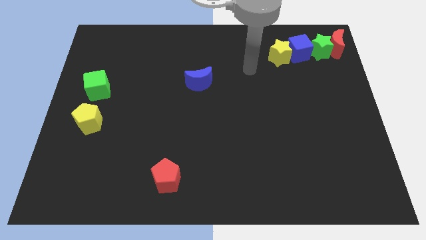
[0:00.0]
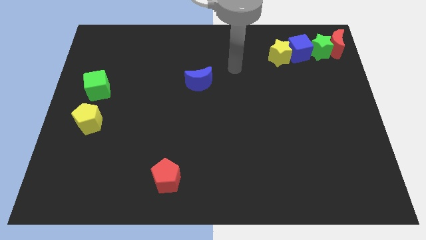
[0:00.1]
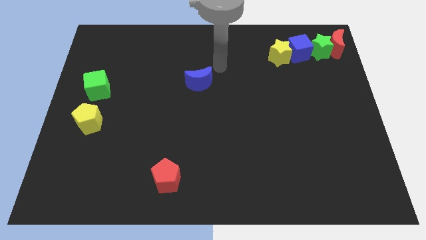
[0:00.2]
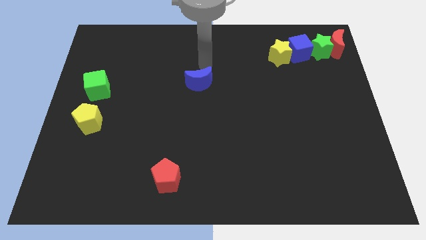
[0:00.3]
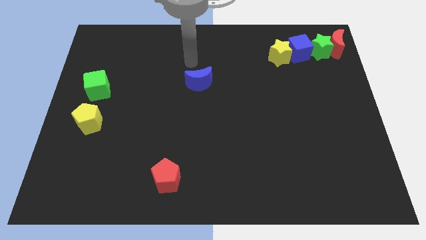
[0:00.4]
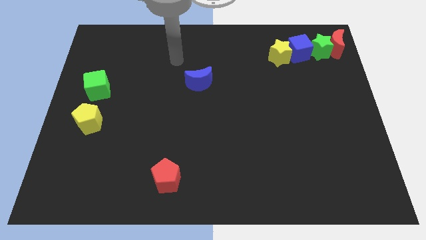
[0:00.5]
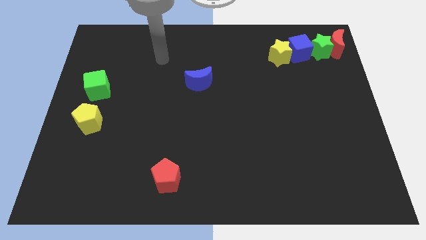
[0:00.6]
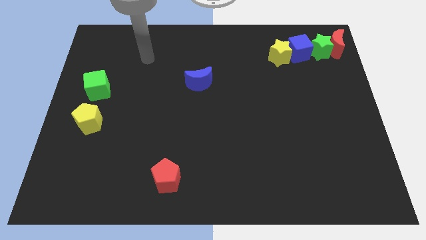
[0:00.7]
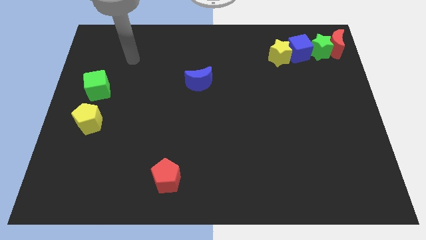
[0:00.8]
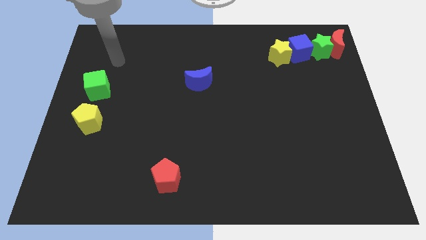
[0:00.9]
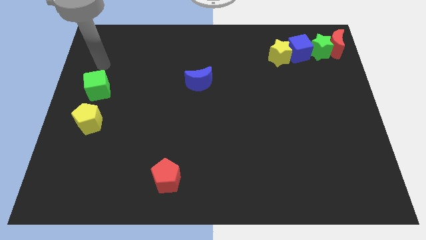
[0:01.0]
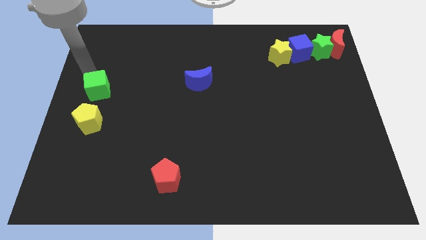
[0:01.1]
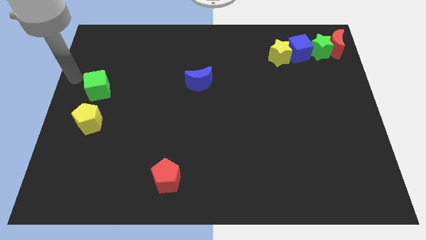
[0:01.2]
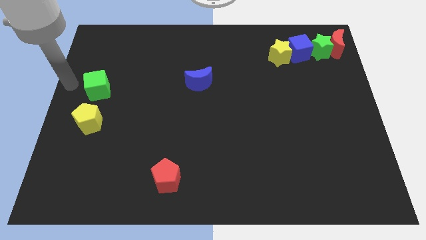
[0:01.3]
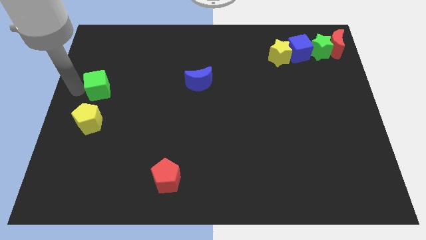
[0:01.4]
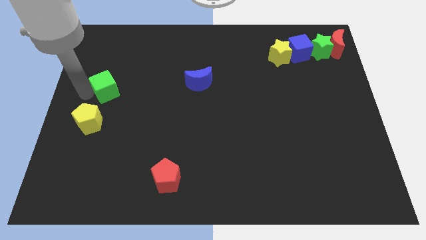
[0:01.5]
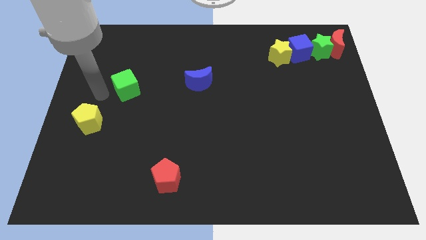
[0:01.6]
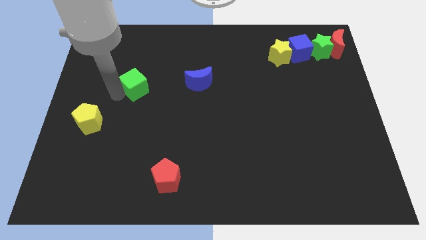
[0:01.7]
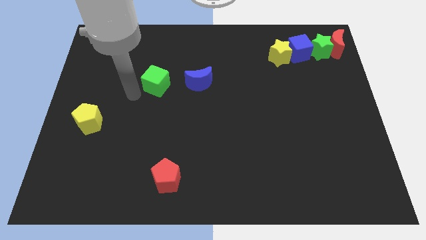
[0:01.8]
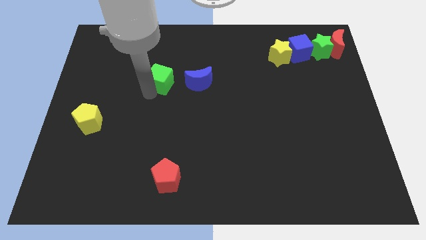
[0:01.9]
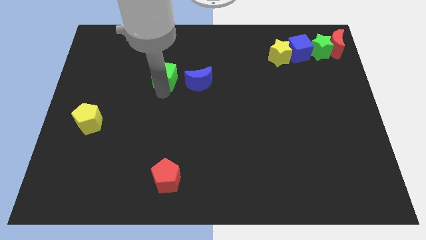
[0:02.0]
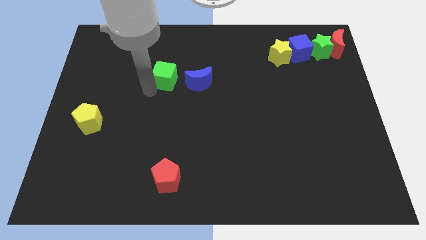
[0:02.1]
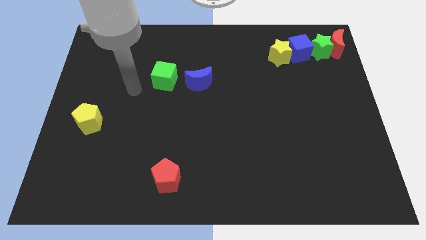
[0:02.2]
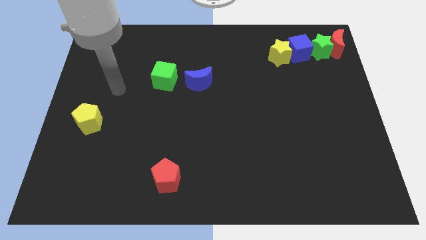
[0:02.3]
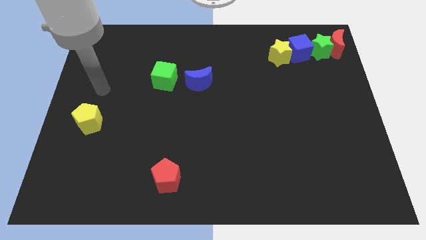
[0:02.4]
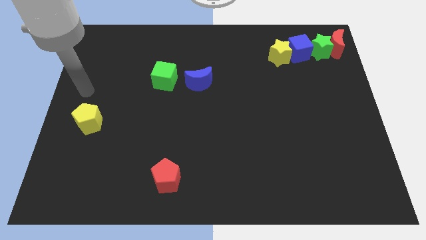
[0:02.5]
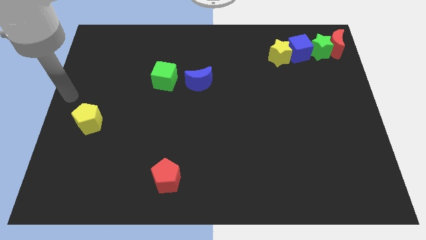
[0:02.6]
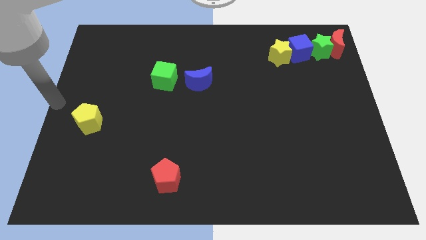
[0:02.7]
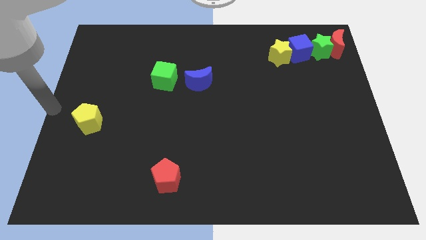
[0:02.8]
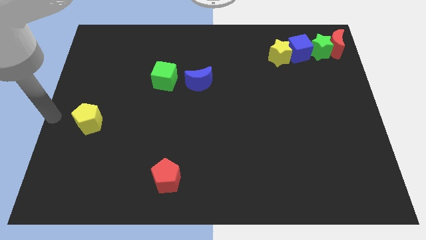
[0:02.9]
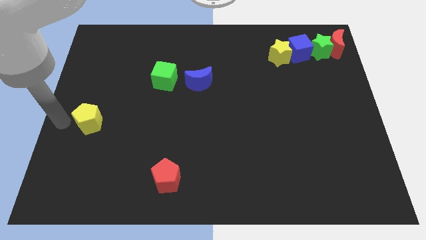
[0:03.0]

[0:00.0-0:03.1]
push the green cube to the left of the blue crescent

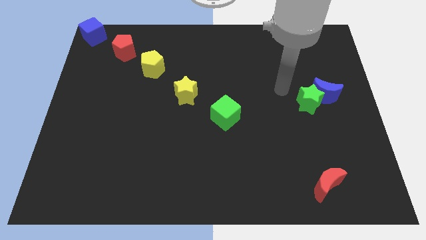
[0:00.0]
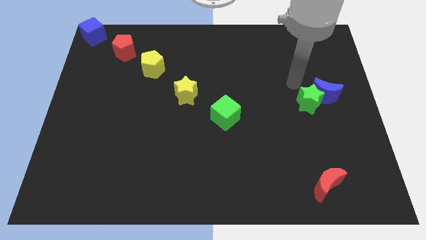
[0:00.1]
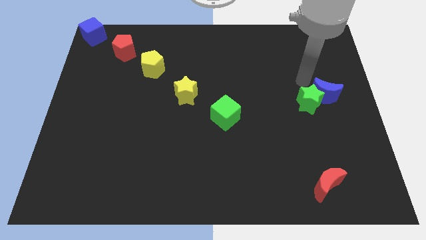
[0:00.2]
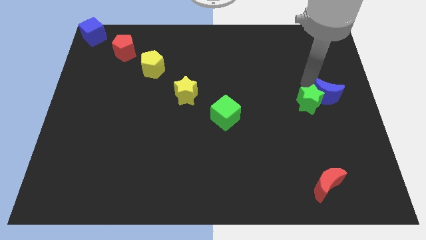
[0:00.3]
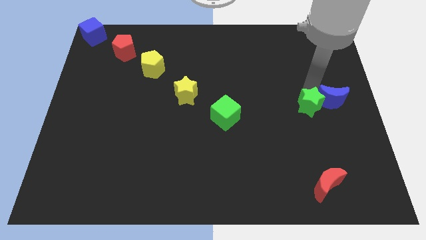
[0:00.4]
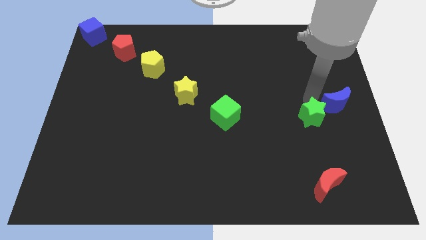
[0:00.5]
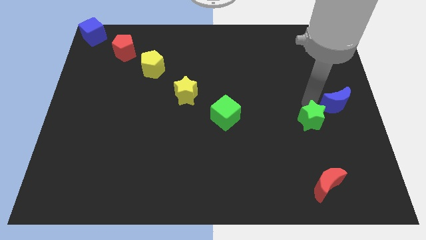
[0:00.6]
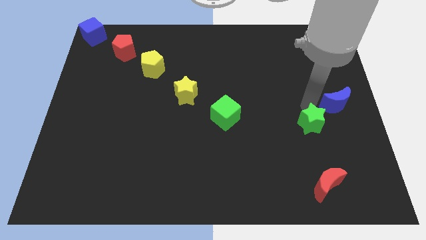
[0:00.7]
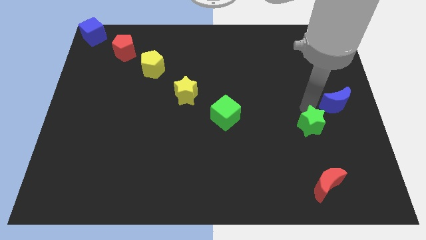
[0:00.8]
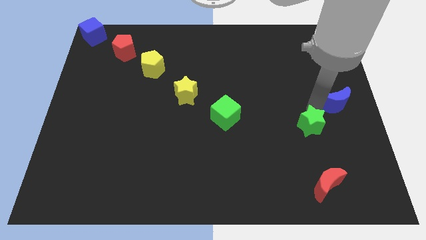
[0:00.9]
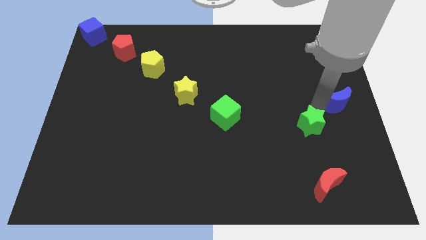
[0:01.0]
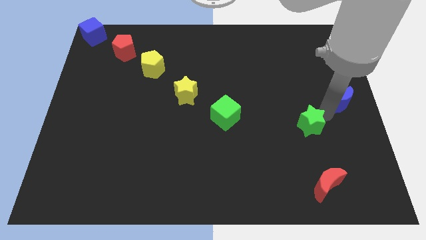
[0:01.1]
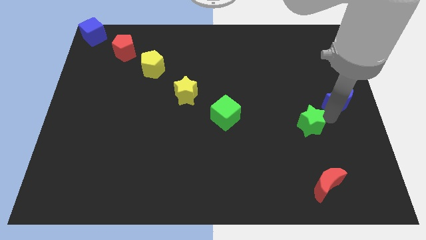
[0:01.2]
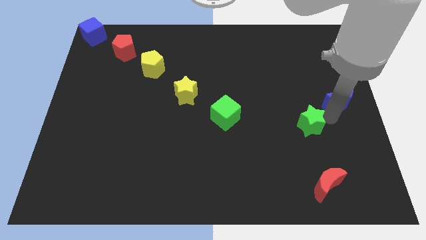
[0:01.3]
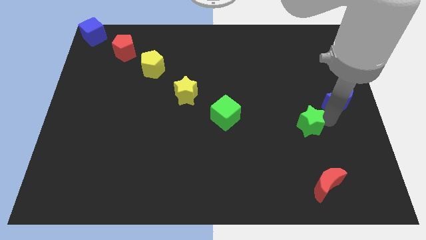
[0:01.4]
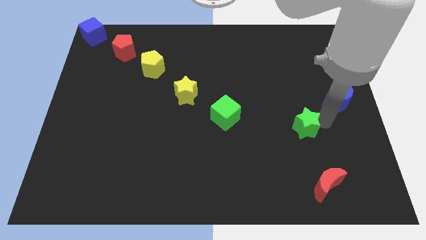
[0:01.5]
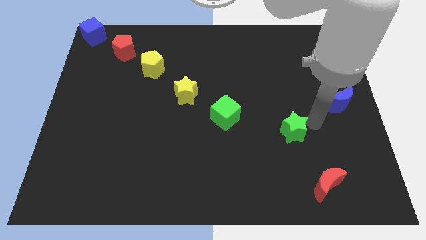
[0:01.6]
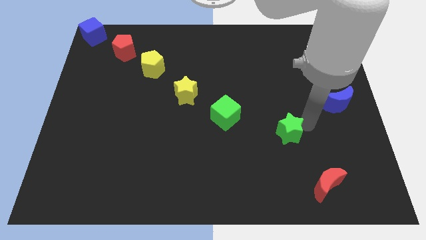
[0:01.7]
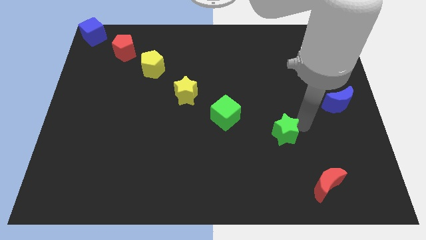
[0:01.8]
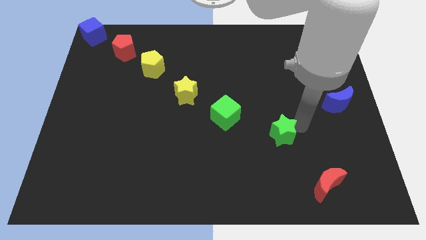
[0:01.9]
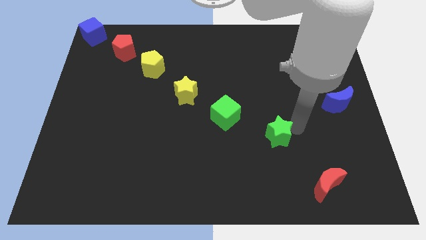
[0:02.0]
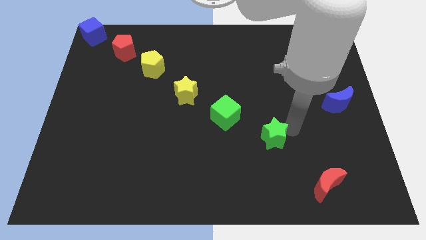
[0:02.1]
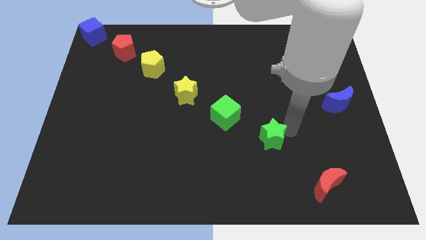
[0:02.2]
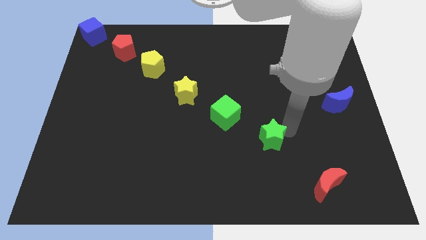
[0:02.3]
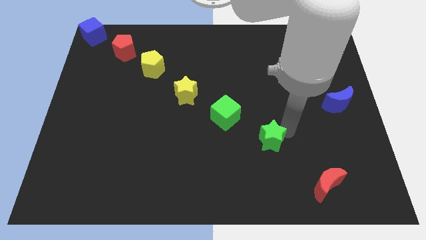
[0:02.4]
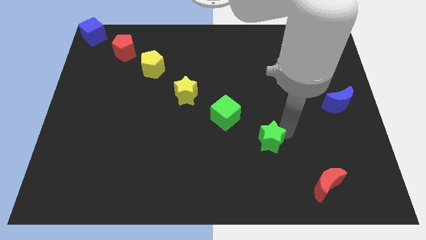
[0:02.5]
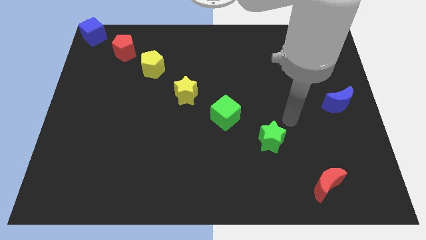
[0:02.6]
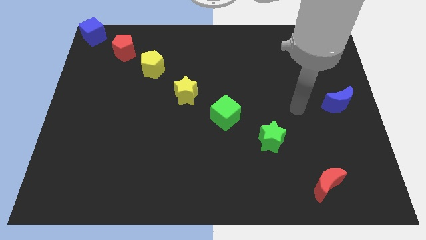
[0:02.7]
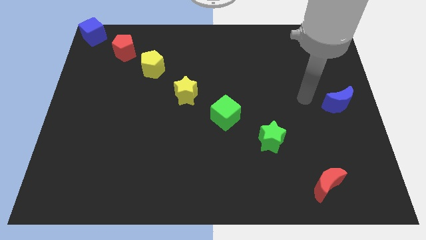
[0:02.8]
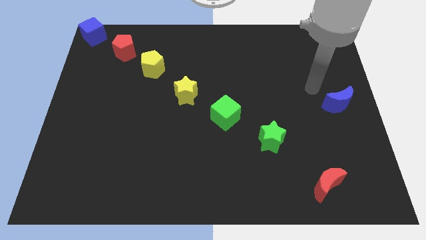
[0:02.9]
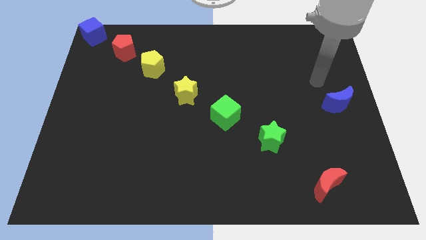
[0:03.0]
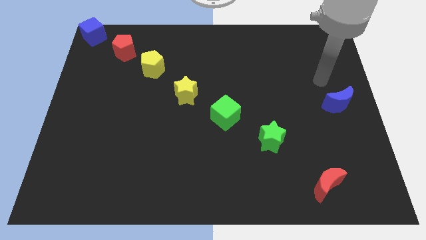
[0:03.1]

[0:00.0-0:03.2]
place the green star to the bottom right of the green cube

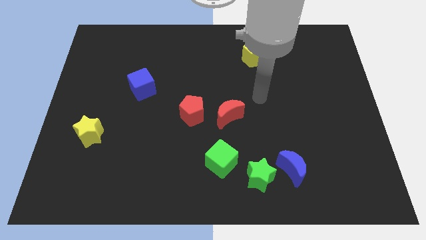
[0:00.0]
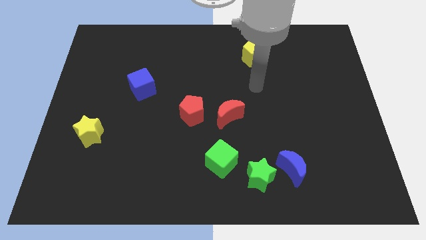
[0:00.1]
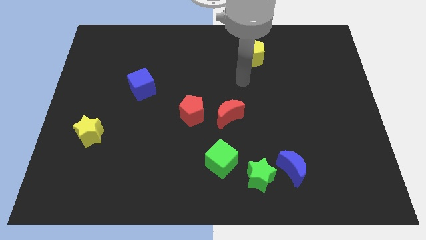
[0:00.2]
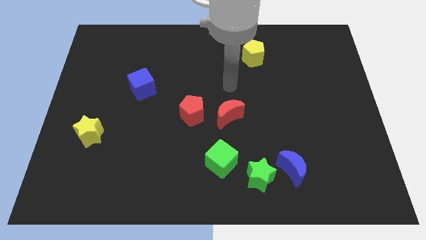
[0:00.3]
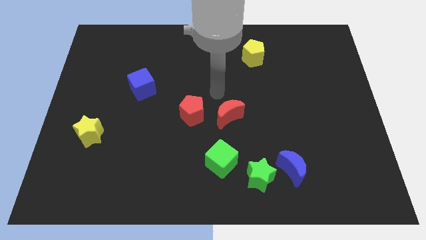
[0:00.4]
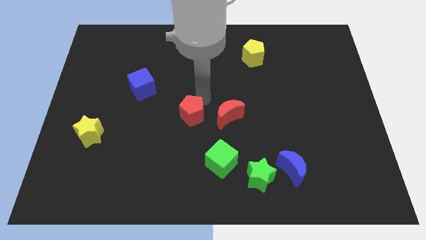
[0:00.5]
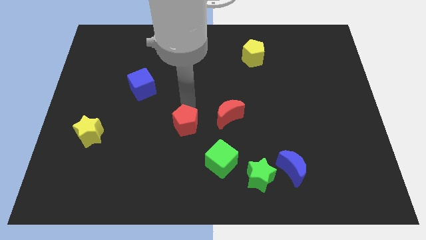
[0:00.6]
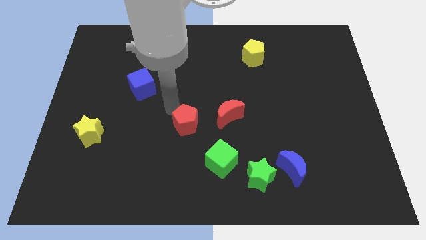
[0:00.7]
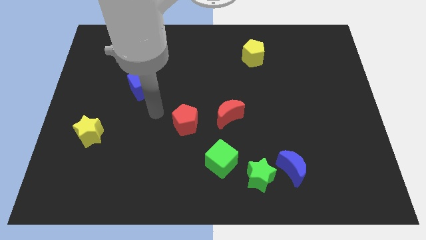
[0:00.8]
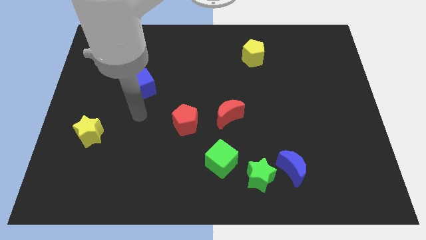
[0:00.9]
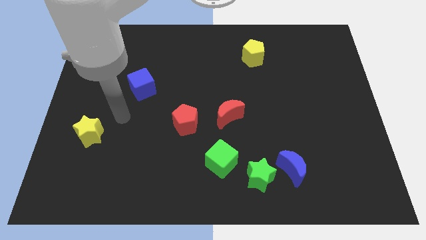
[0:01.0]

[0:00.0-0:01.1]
push red pentagon above green cube

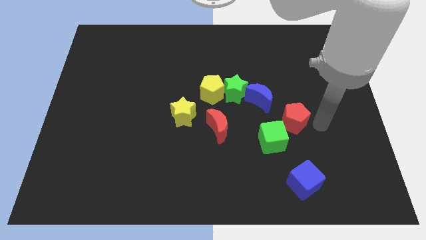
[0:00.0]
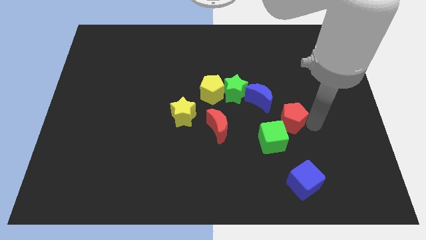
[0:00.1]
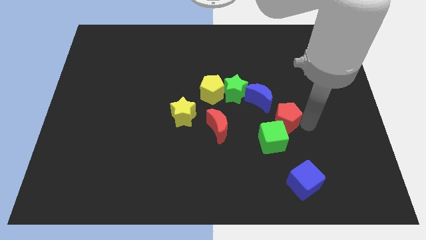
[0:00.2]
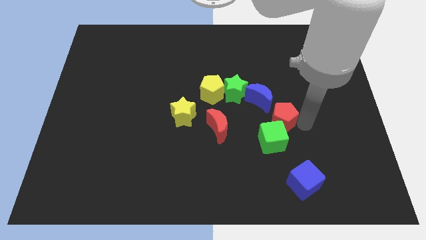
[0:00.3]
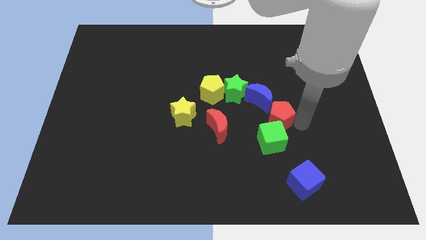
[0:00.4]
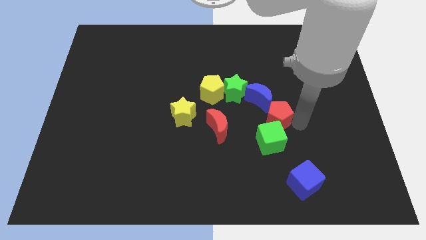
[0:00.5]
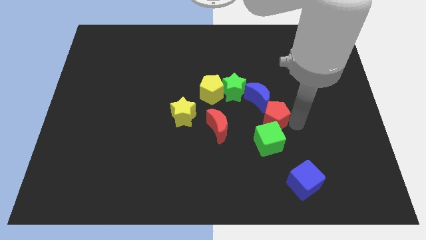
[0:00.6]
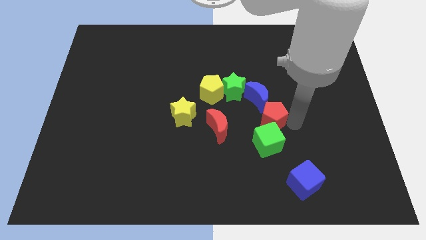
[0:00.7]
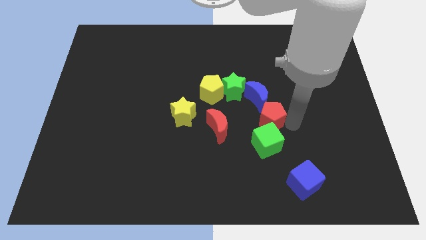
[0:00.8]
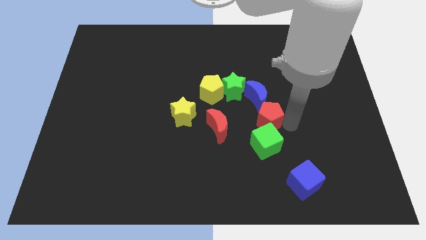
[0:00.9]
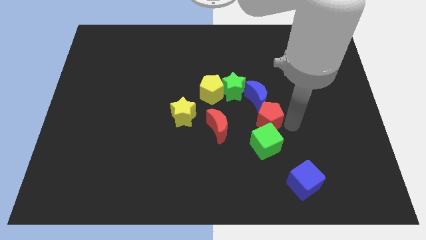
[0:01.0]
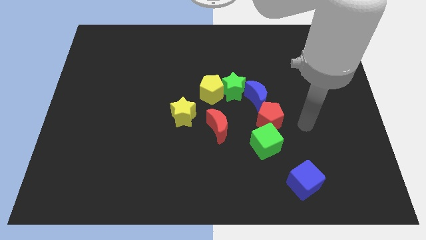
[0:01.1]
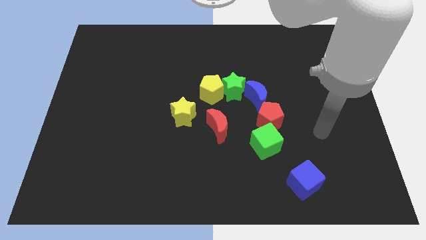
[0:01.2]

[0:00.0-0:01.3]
place the red pentagon in between the green cube and the blue crescent

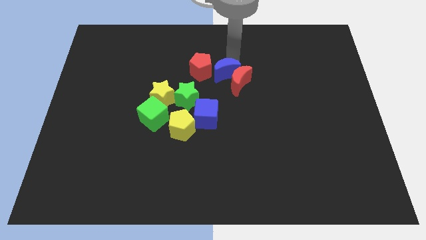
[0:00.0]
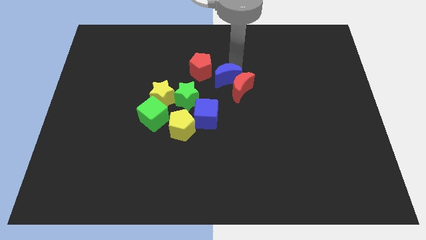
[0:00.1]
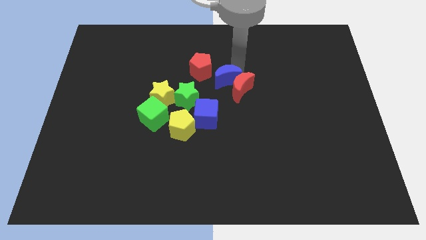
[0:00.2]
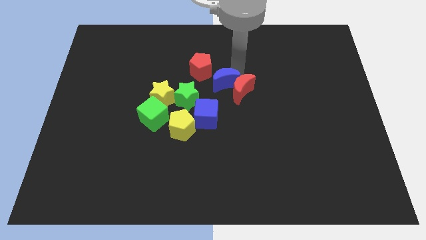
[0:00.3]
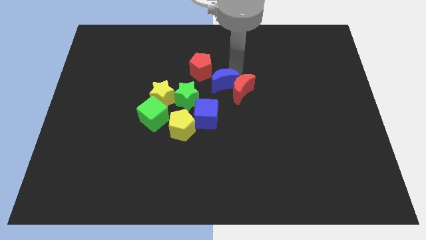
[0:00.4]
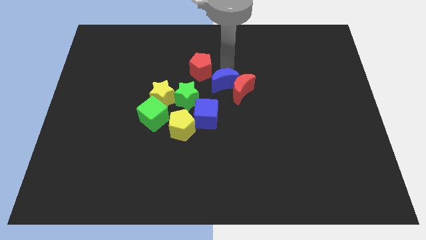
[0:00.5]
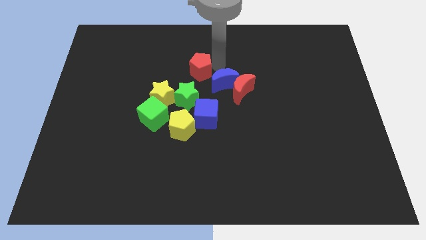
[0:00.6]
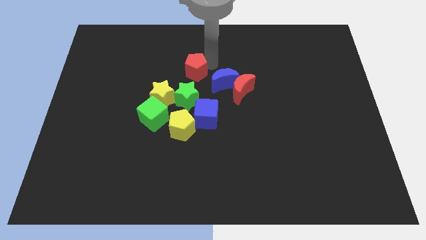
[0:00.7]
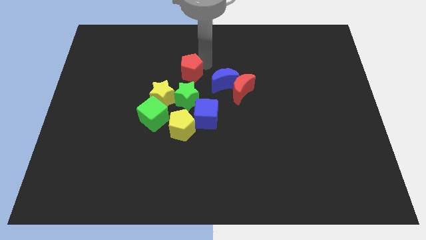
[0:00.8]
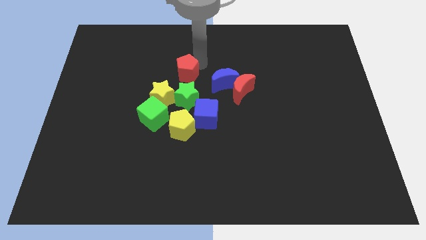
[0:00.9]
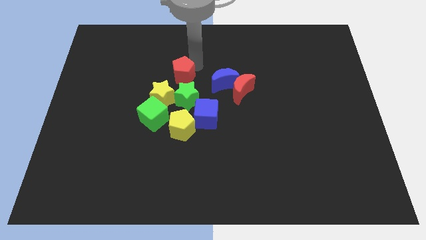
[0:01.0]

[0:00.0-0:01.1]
separate red pentagon from blue moon
